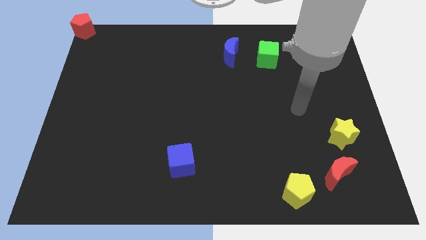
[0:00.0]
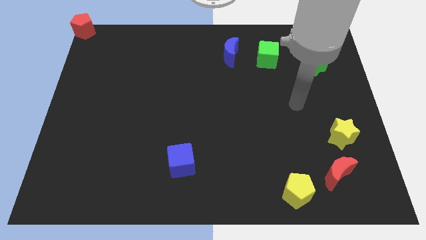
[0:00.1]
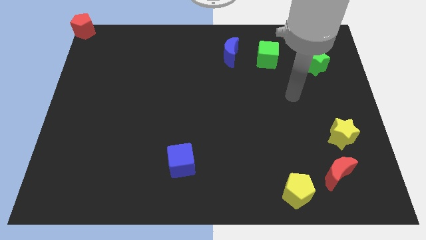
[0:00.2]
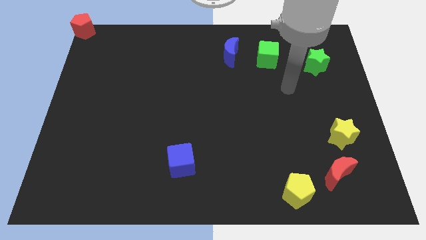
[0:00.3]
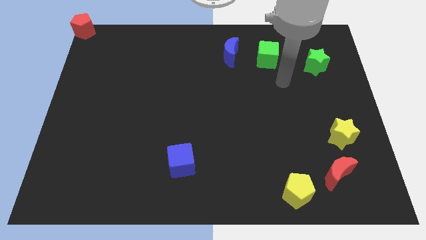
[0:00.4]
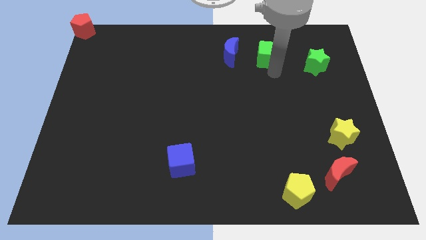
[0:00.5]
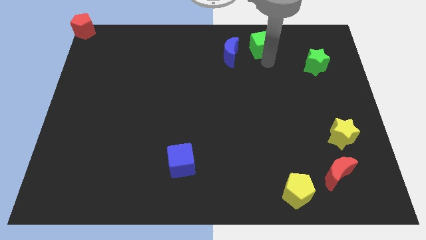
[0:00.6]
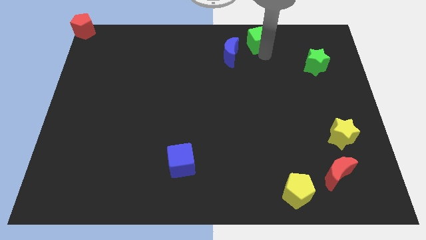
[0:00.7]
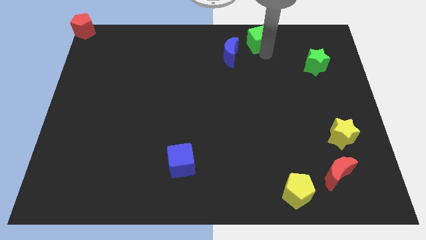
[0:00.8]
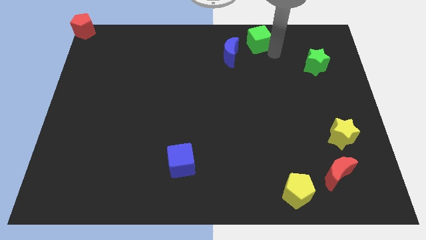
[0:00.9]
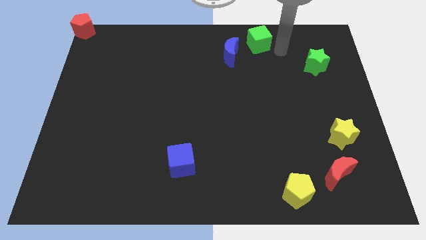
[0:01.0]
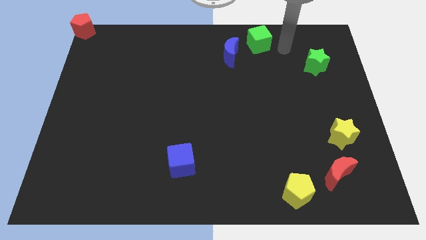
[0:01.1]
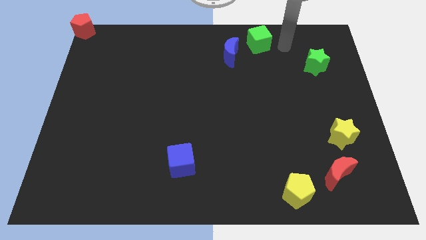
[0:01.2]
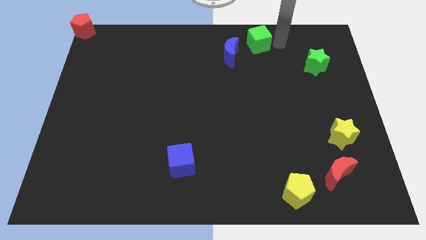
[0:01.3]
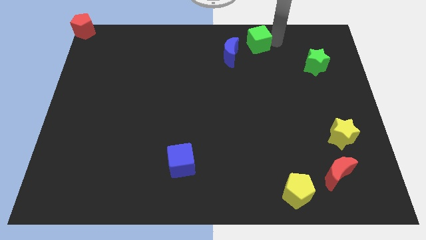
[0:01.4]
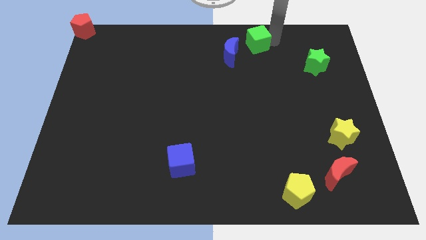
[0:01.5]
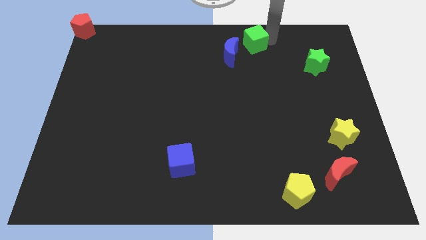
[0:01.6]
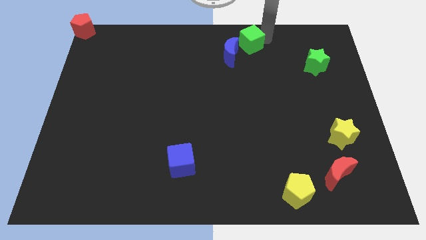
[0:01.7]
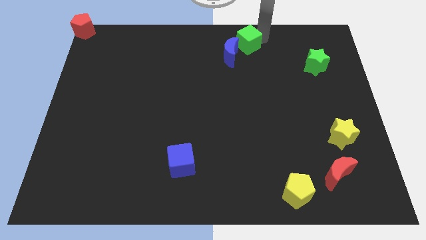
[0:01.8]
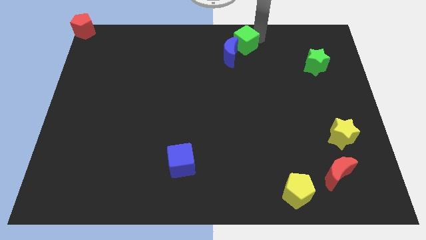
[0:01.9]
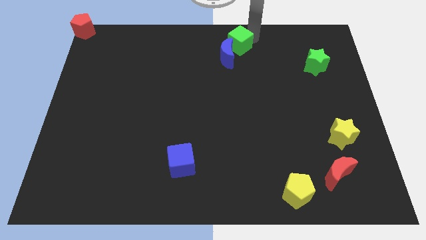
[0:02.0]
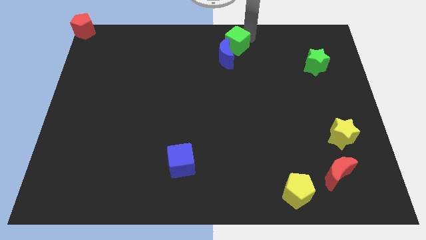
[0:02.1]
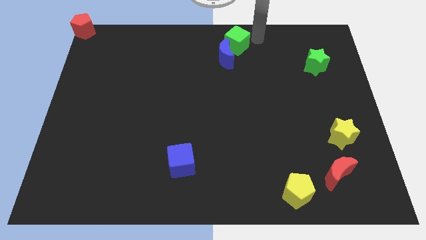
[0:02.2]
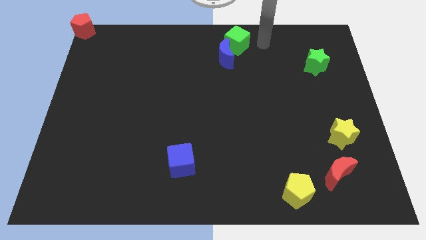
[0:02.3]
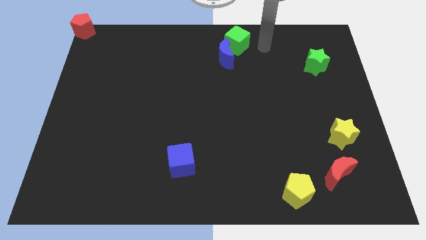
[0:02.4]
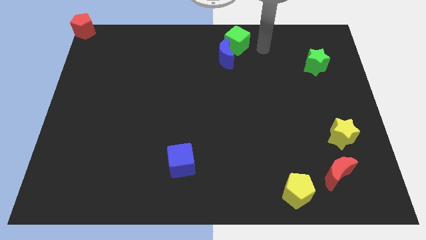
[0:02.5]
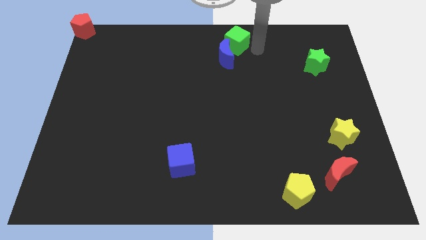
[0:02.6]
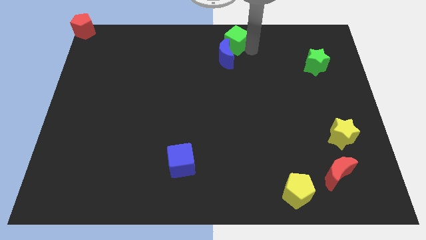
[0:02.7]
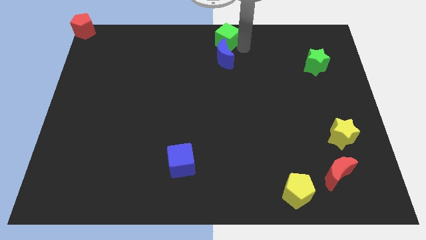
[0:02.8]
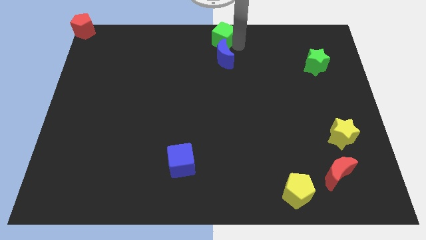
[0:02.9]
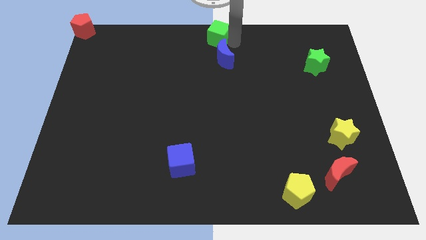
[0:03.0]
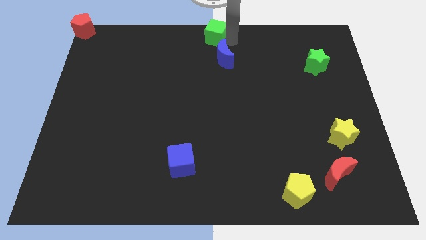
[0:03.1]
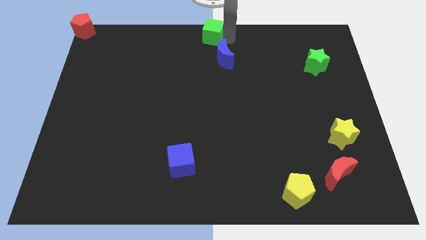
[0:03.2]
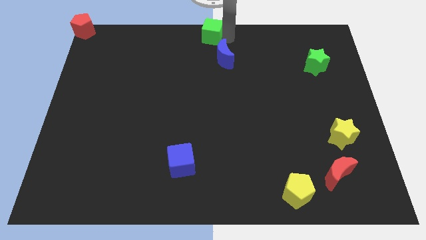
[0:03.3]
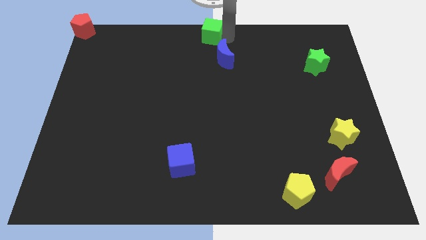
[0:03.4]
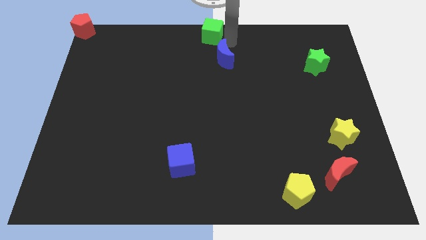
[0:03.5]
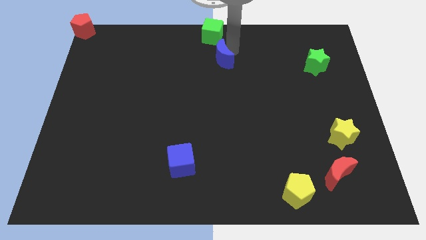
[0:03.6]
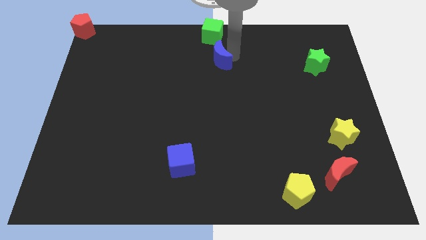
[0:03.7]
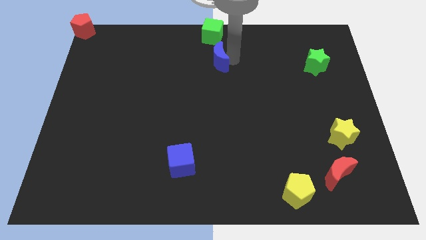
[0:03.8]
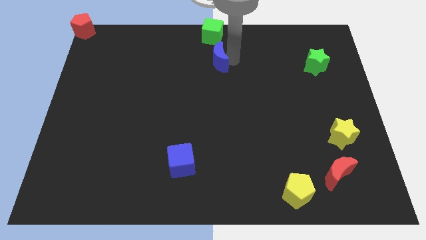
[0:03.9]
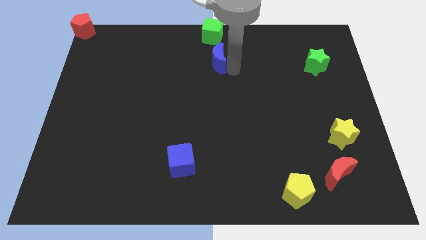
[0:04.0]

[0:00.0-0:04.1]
push the green cube to the top center of the board

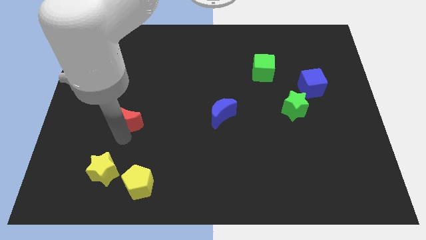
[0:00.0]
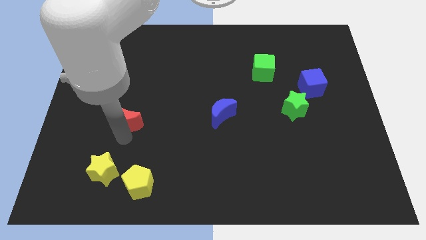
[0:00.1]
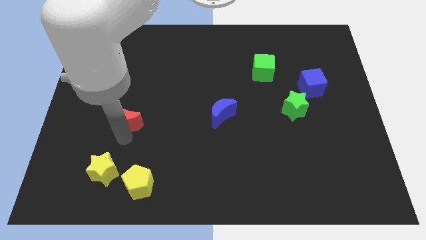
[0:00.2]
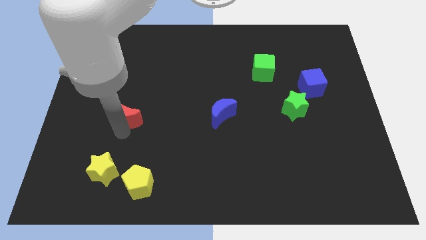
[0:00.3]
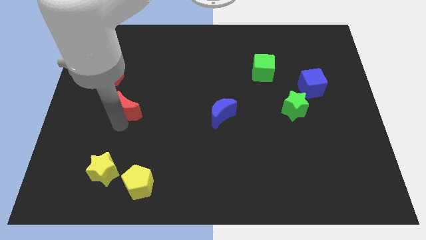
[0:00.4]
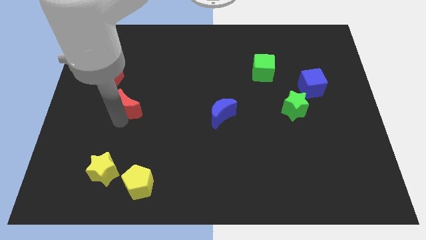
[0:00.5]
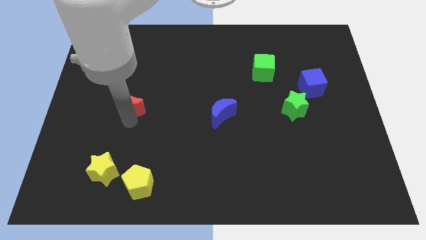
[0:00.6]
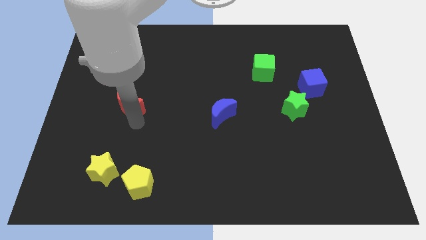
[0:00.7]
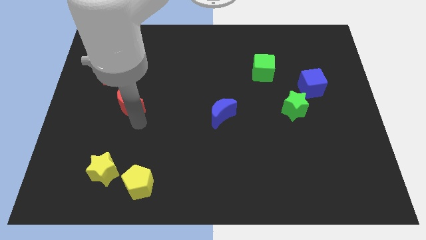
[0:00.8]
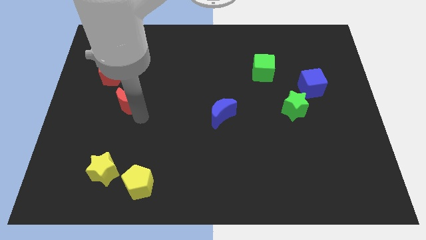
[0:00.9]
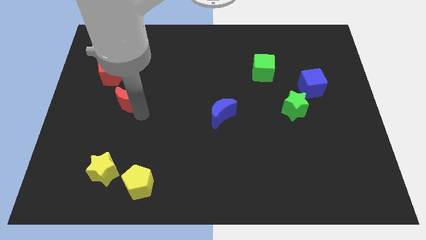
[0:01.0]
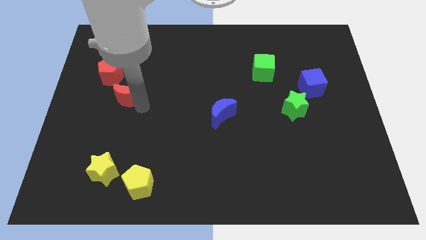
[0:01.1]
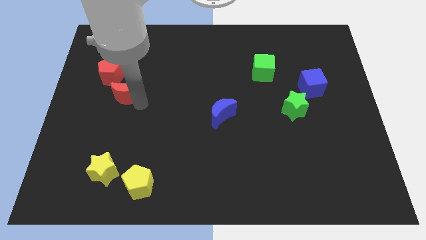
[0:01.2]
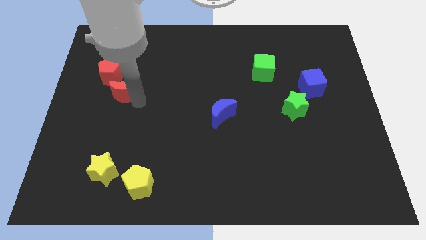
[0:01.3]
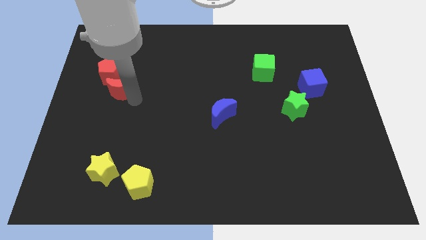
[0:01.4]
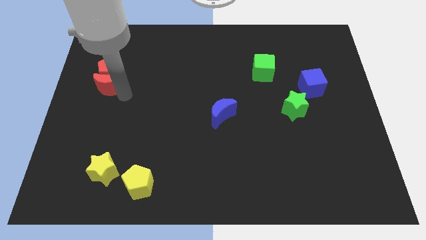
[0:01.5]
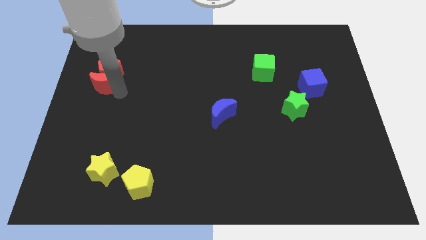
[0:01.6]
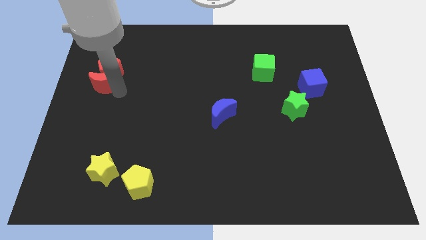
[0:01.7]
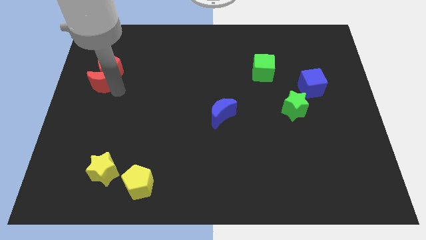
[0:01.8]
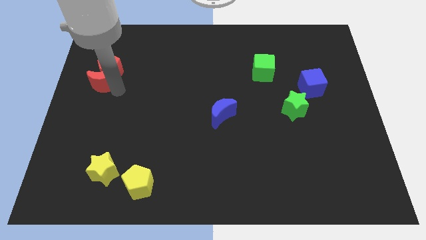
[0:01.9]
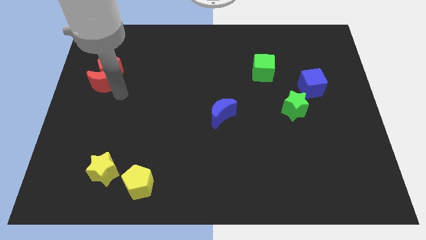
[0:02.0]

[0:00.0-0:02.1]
push red moon into red pentagon

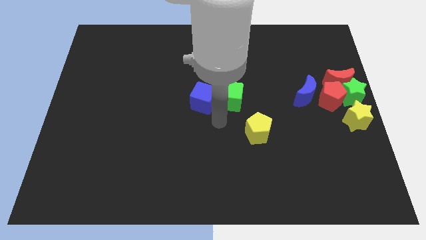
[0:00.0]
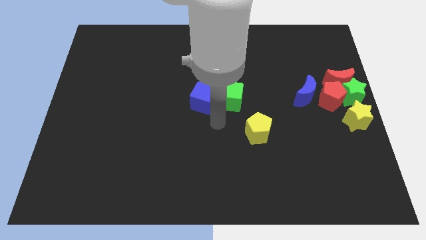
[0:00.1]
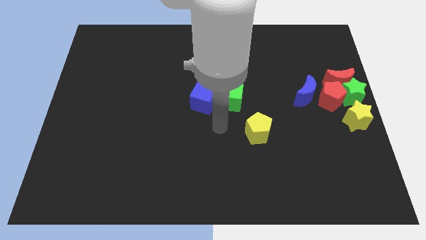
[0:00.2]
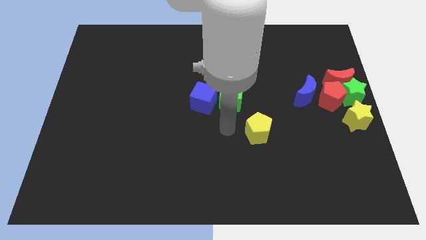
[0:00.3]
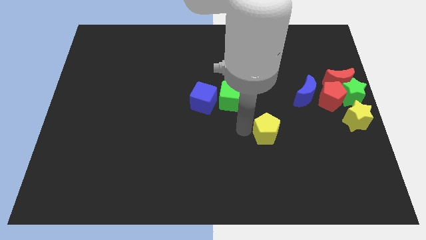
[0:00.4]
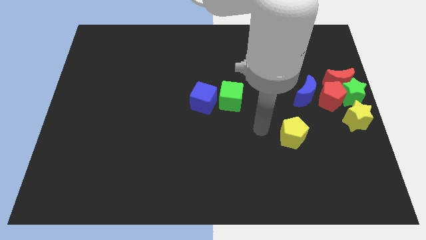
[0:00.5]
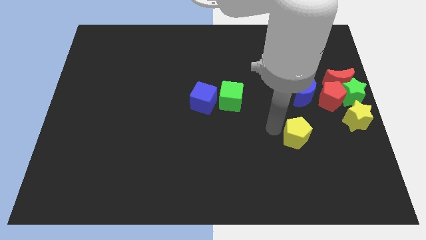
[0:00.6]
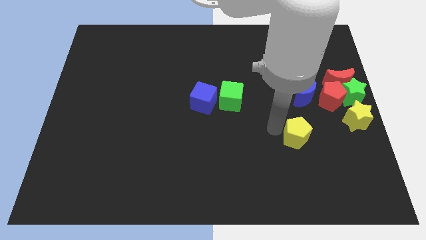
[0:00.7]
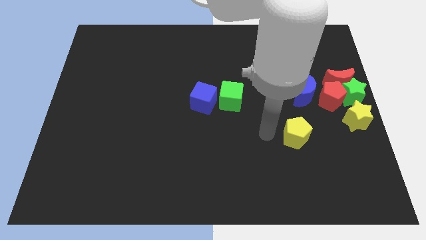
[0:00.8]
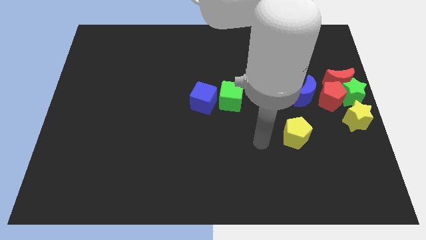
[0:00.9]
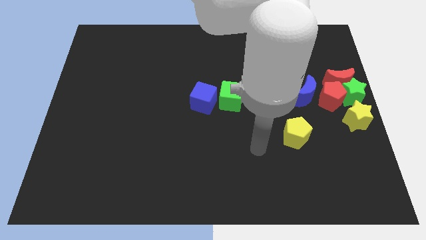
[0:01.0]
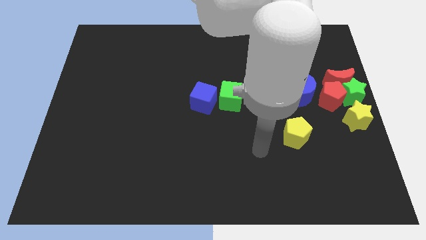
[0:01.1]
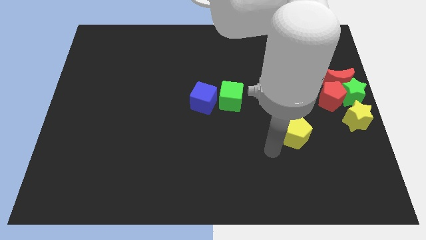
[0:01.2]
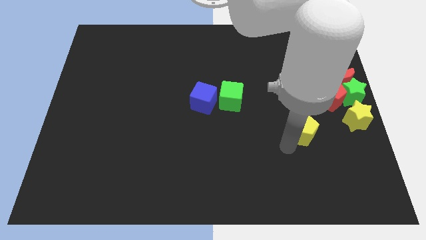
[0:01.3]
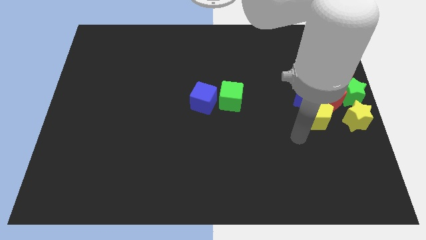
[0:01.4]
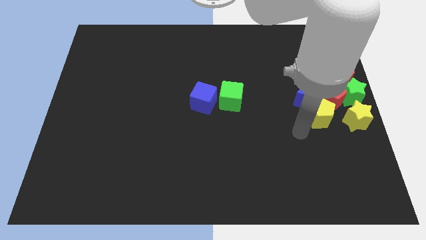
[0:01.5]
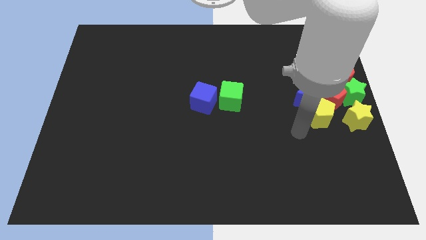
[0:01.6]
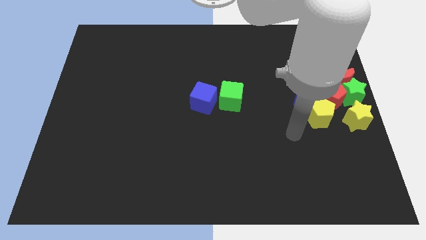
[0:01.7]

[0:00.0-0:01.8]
push the yellow pentagon to the left of the yellow star

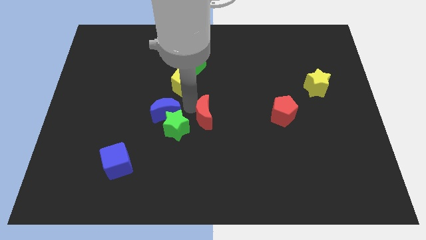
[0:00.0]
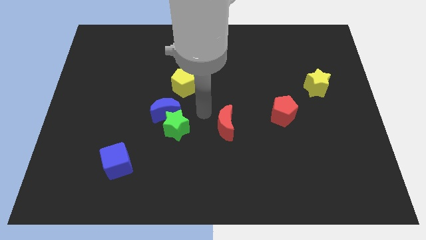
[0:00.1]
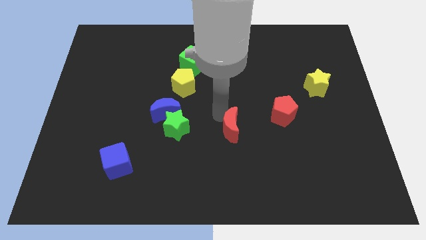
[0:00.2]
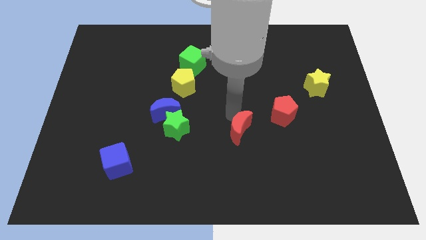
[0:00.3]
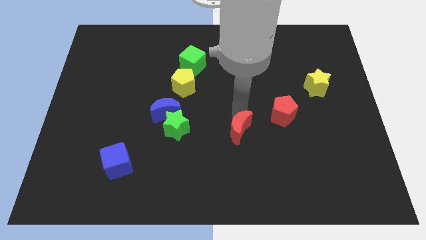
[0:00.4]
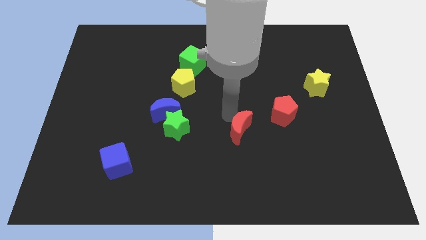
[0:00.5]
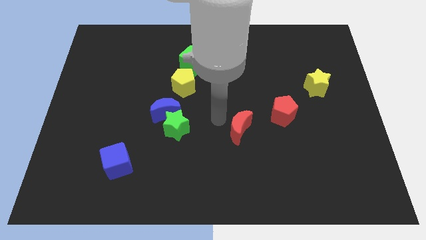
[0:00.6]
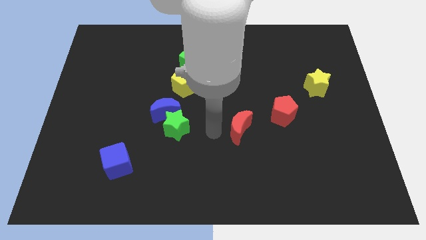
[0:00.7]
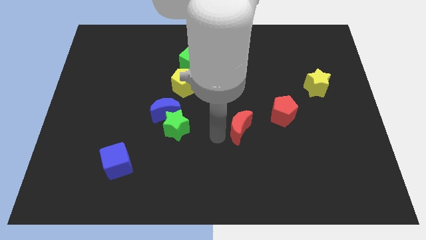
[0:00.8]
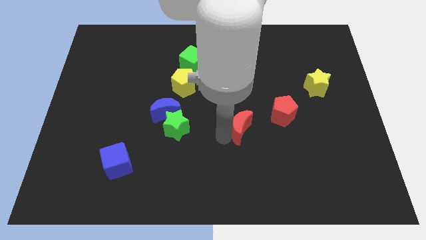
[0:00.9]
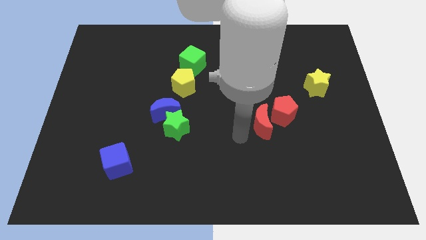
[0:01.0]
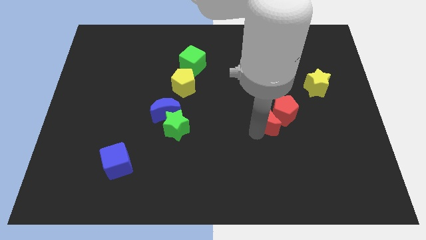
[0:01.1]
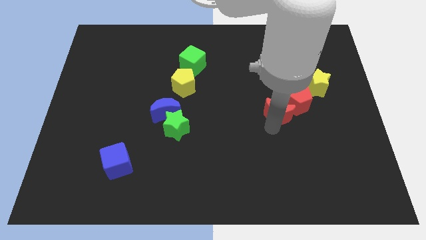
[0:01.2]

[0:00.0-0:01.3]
push the red moon towards the red pentagon
